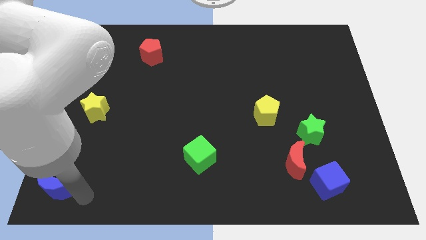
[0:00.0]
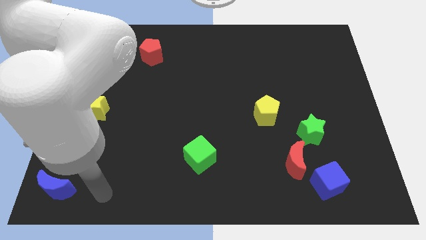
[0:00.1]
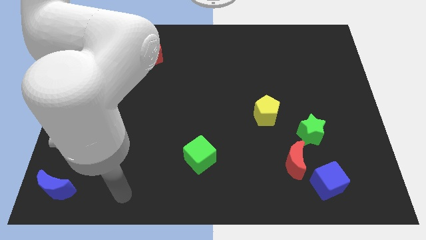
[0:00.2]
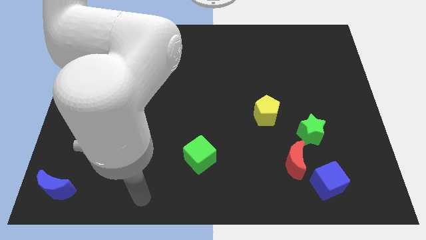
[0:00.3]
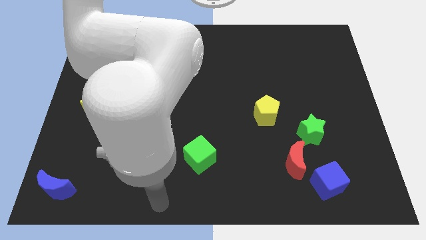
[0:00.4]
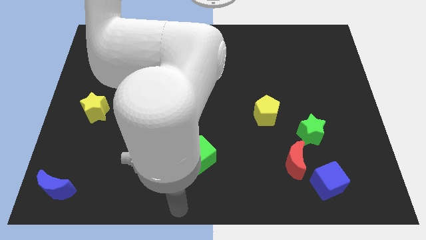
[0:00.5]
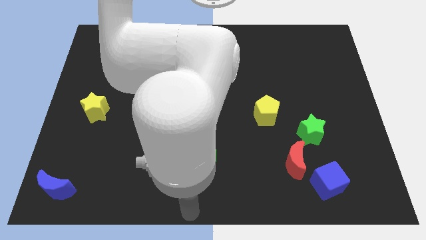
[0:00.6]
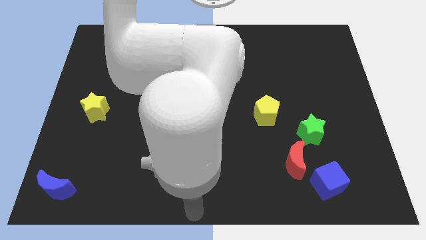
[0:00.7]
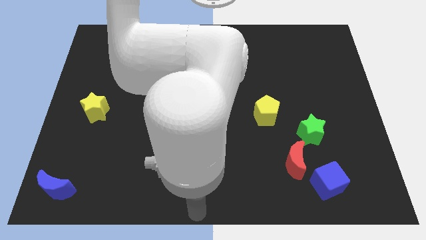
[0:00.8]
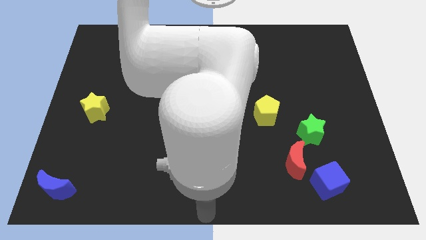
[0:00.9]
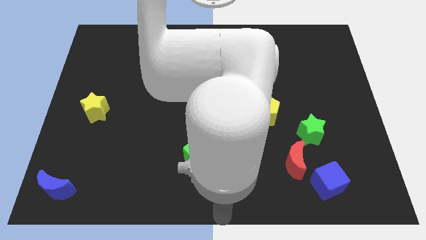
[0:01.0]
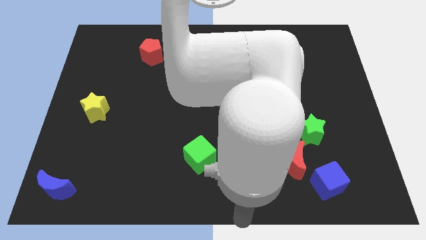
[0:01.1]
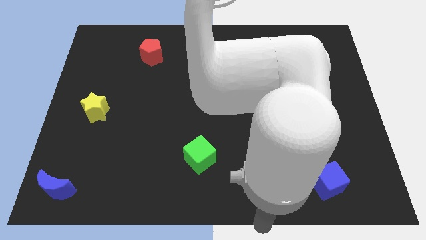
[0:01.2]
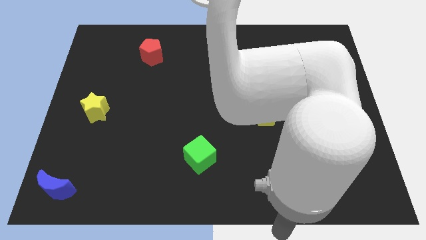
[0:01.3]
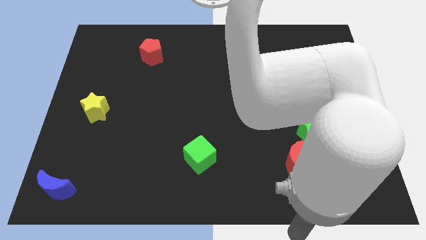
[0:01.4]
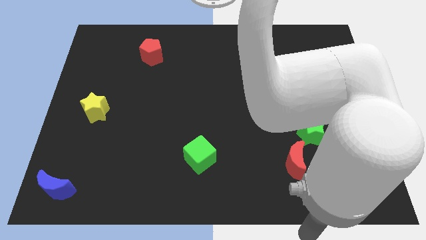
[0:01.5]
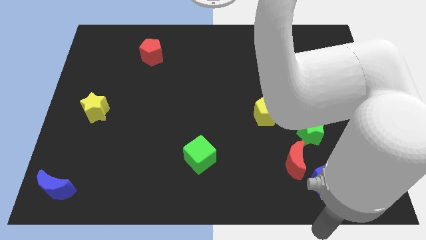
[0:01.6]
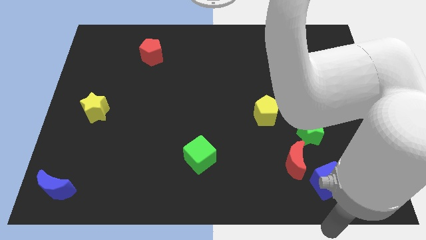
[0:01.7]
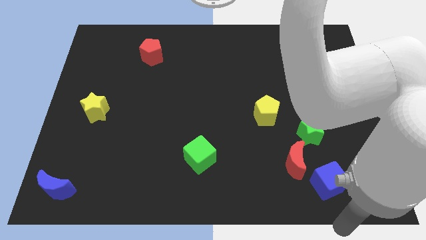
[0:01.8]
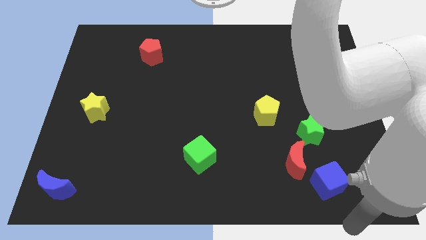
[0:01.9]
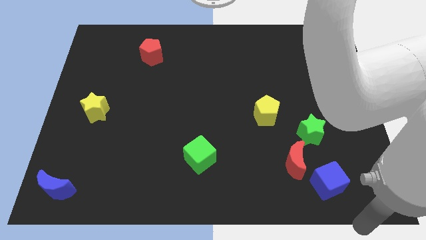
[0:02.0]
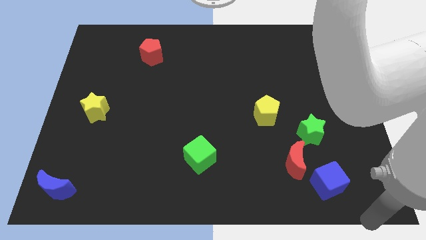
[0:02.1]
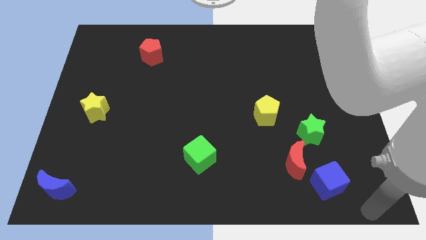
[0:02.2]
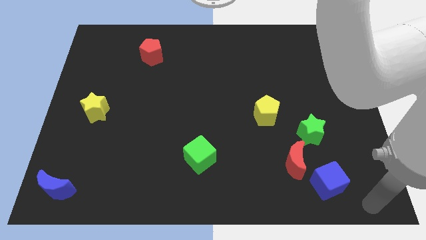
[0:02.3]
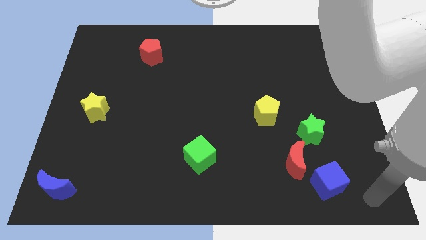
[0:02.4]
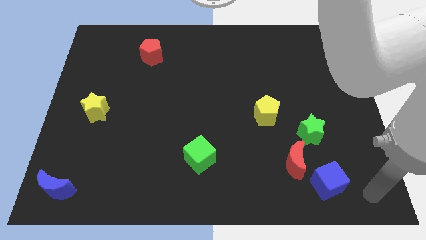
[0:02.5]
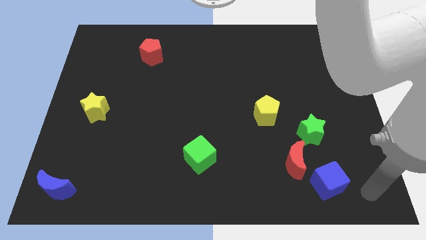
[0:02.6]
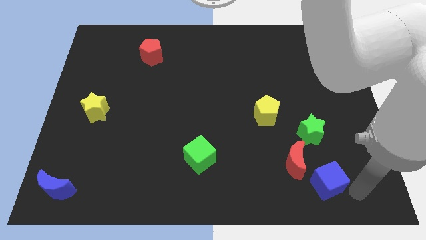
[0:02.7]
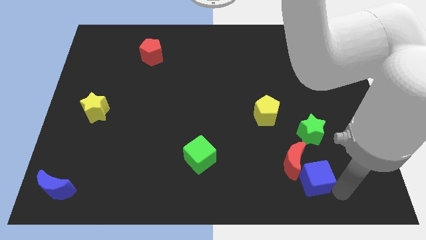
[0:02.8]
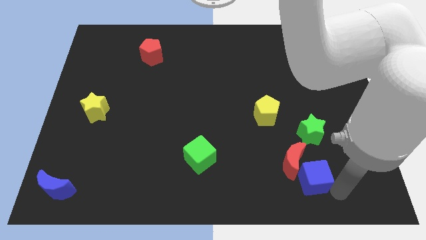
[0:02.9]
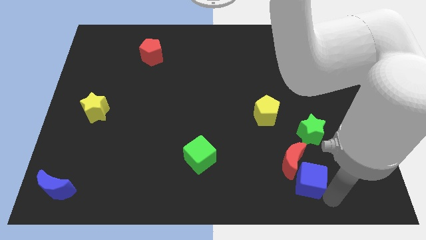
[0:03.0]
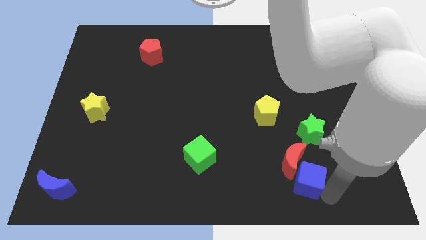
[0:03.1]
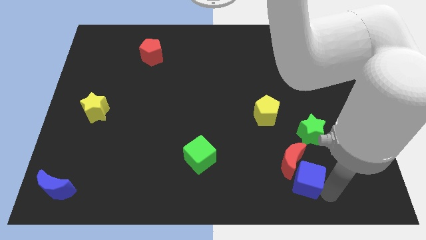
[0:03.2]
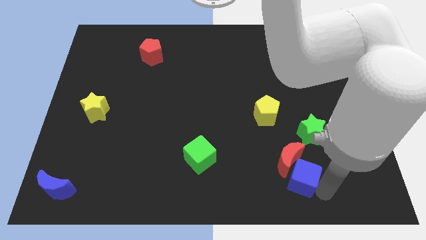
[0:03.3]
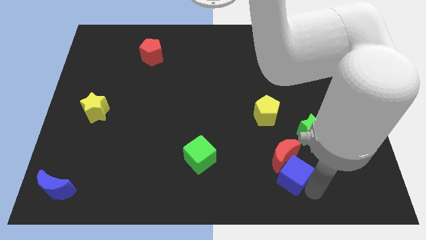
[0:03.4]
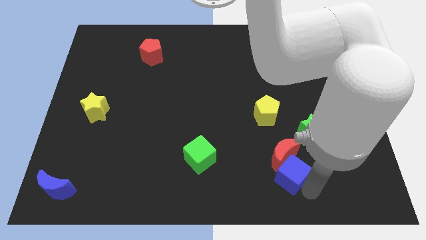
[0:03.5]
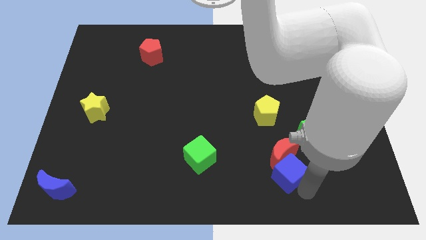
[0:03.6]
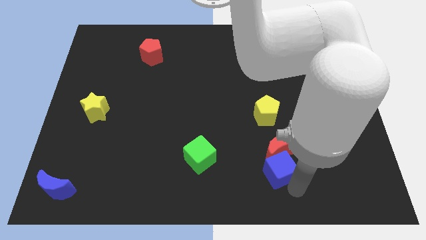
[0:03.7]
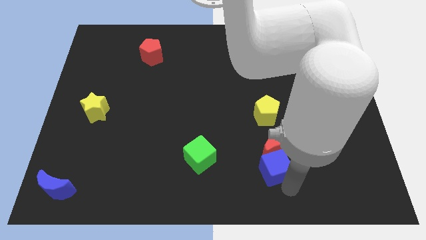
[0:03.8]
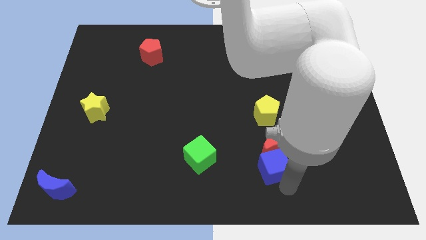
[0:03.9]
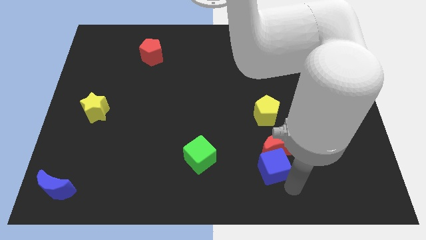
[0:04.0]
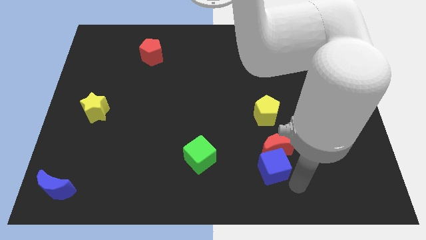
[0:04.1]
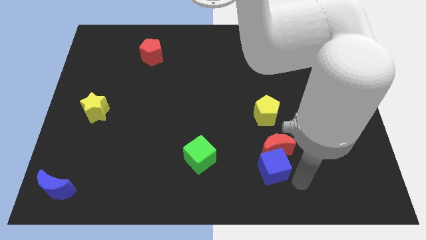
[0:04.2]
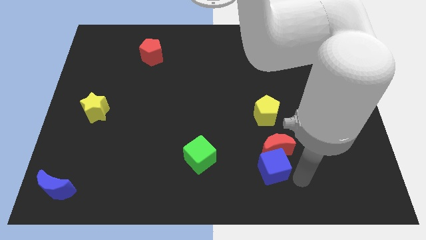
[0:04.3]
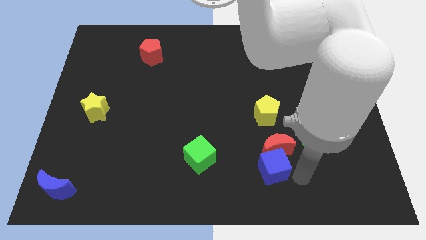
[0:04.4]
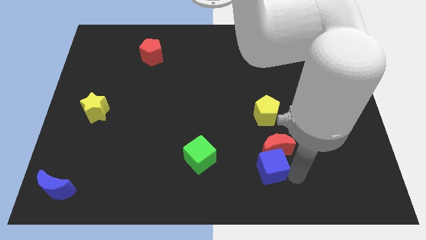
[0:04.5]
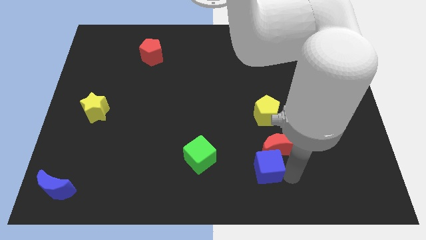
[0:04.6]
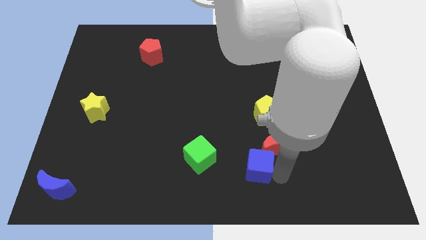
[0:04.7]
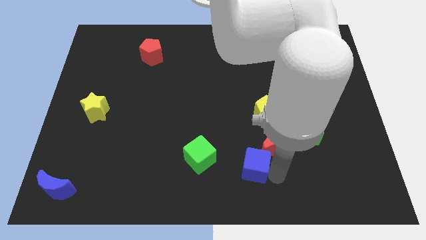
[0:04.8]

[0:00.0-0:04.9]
move the blue cube into the red moon

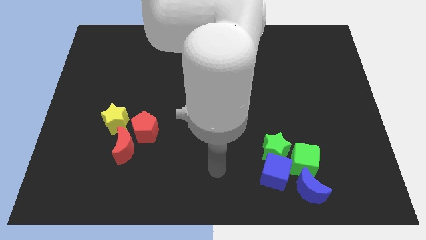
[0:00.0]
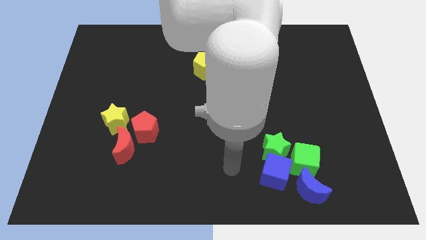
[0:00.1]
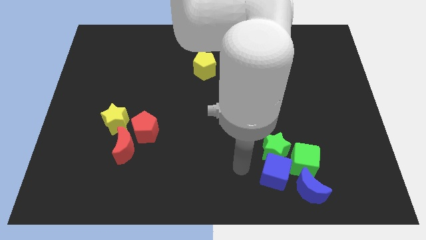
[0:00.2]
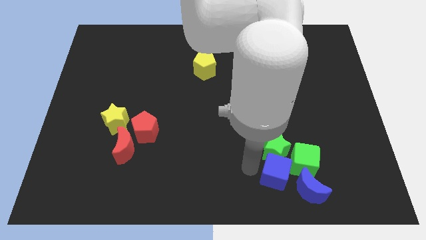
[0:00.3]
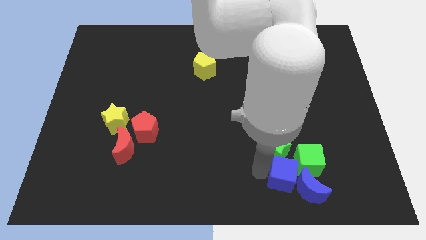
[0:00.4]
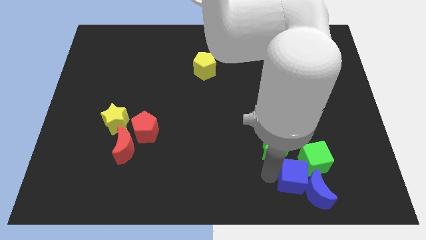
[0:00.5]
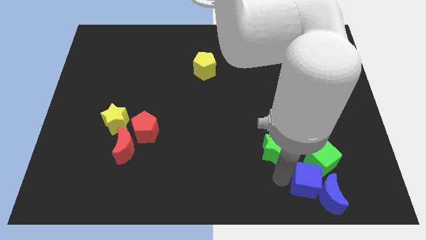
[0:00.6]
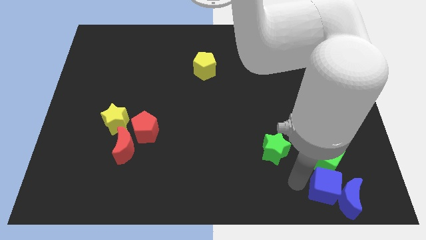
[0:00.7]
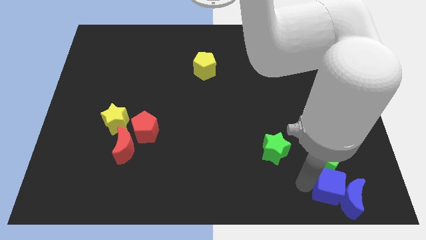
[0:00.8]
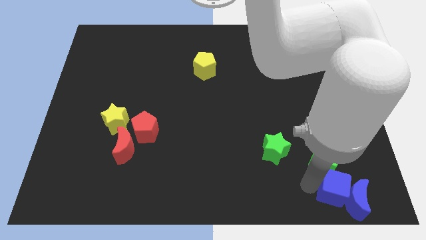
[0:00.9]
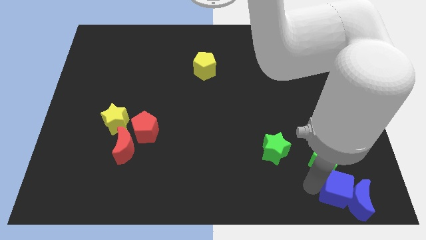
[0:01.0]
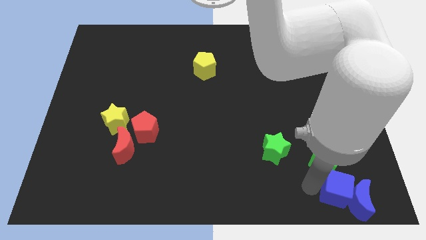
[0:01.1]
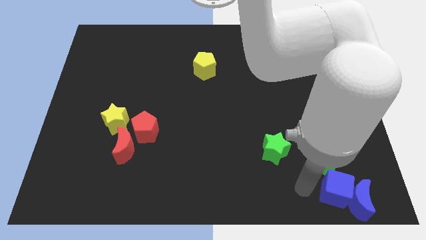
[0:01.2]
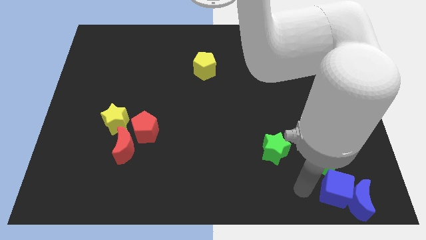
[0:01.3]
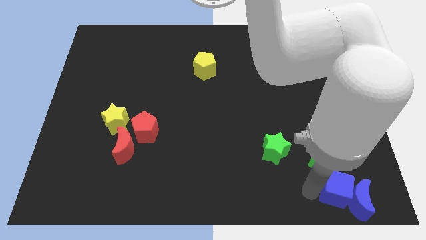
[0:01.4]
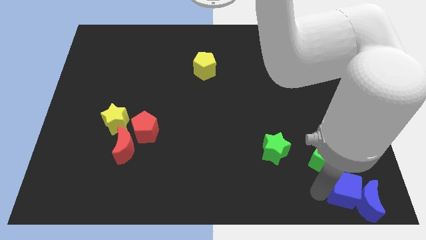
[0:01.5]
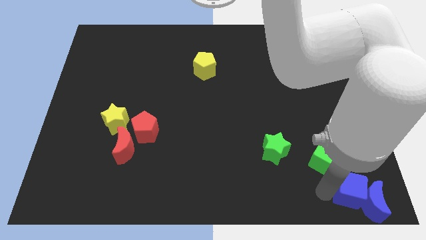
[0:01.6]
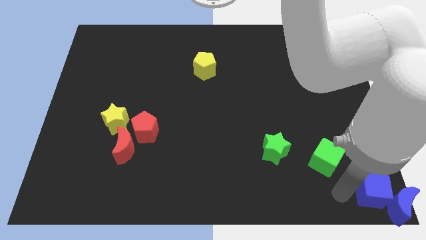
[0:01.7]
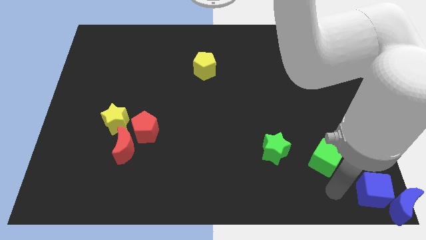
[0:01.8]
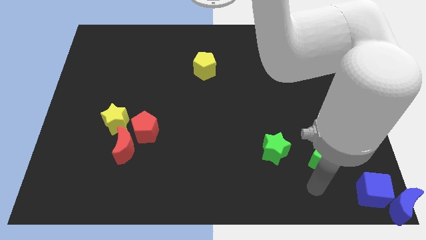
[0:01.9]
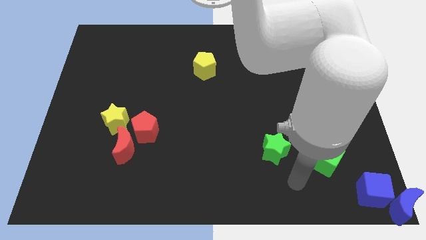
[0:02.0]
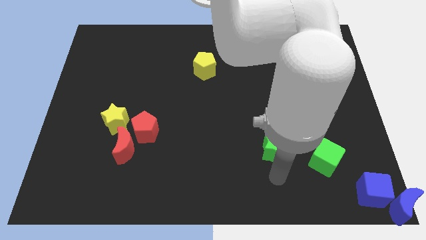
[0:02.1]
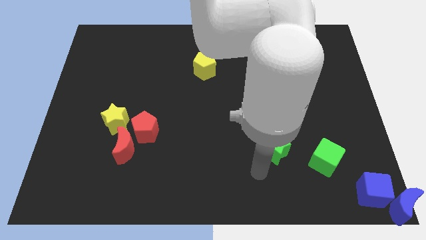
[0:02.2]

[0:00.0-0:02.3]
move blue cube to the bottom right

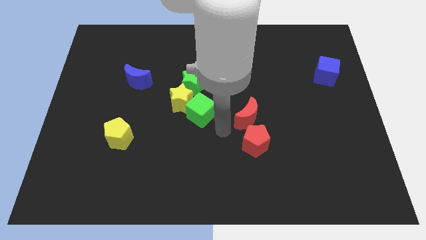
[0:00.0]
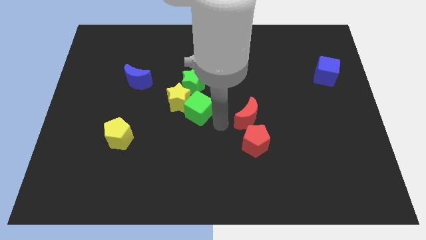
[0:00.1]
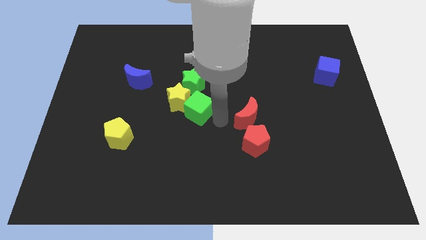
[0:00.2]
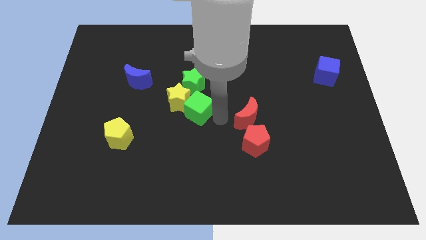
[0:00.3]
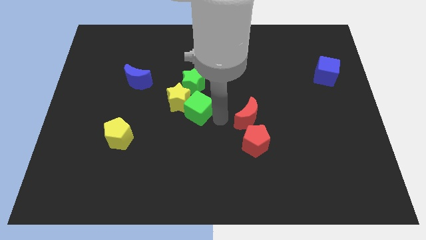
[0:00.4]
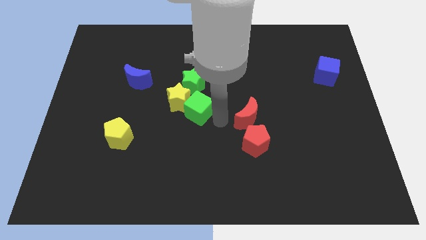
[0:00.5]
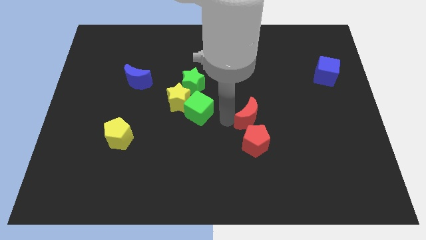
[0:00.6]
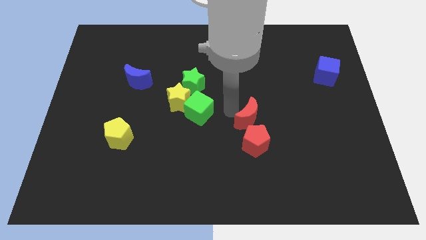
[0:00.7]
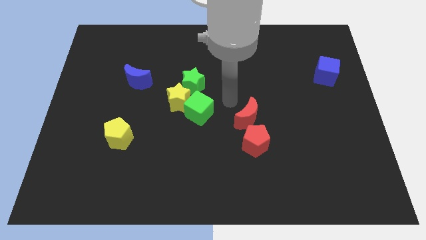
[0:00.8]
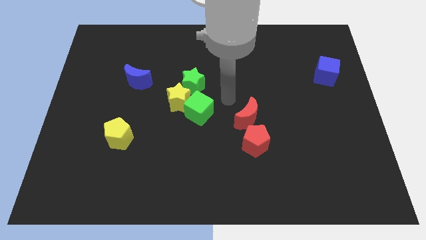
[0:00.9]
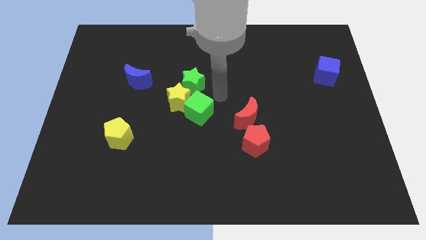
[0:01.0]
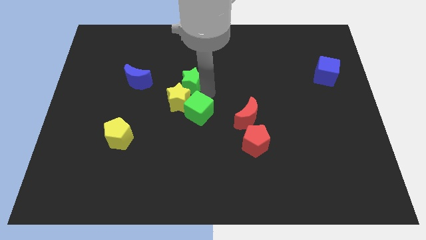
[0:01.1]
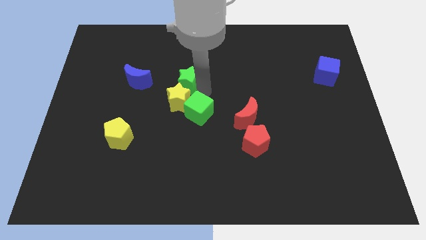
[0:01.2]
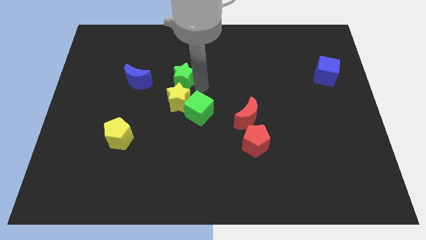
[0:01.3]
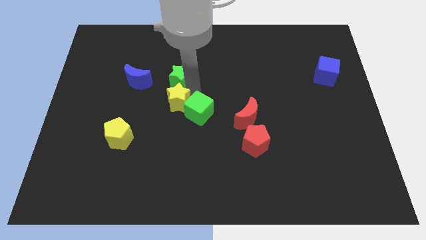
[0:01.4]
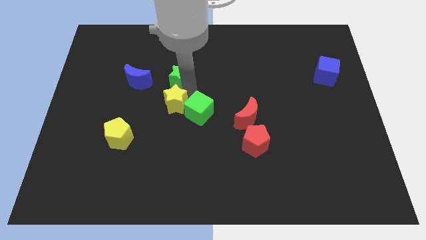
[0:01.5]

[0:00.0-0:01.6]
push the green star towards the blue crescent

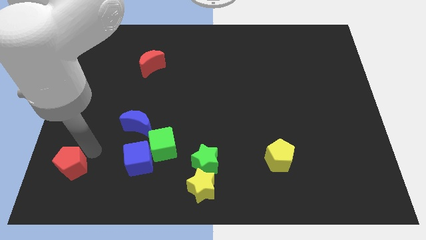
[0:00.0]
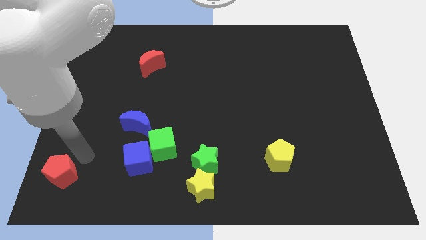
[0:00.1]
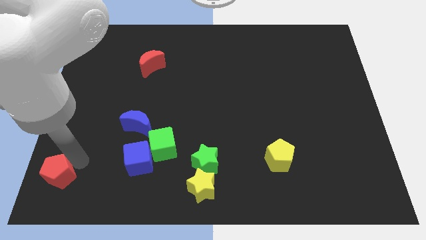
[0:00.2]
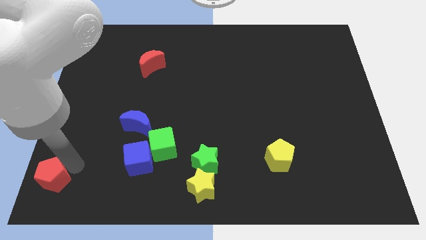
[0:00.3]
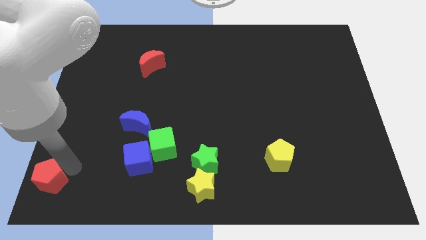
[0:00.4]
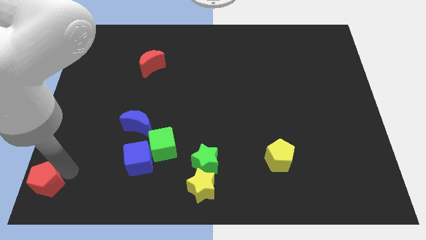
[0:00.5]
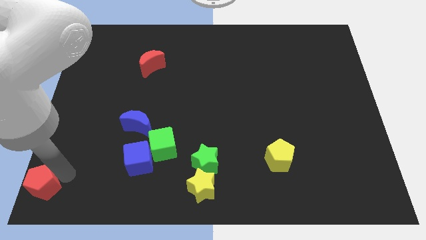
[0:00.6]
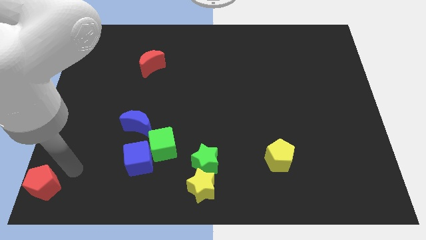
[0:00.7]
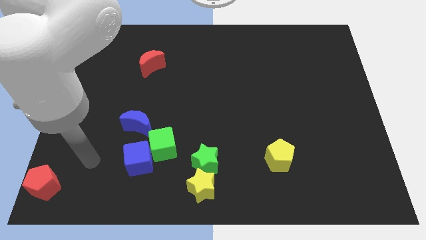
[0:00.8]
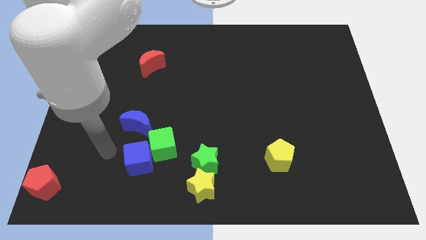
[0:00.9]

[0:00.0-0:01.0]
move red pentagon to bottom left corner
